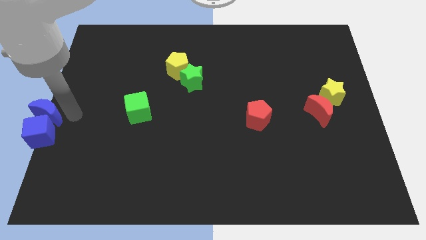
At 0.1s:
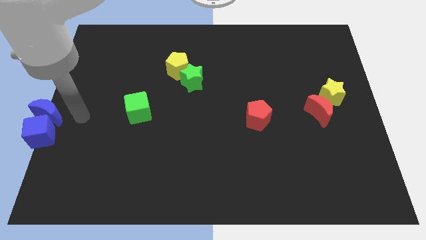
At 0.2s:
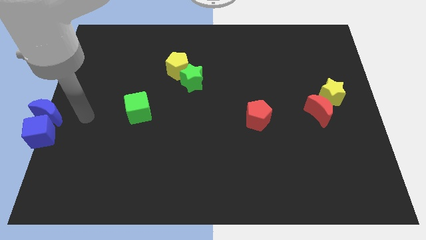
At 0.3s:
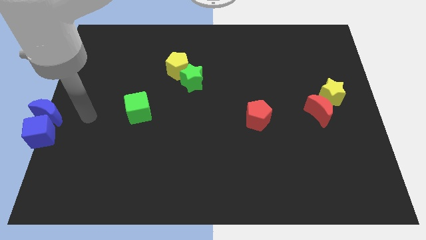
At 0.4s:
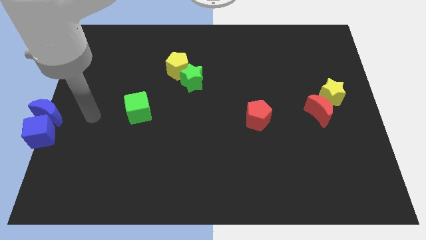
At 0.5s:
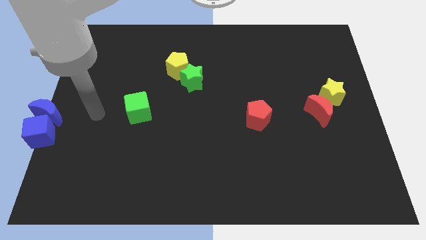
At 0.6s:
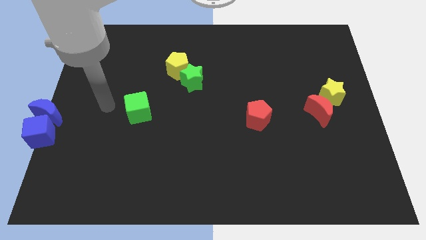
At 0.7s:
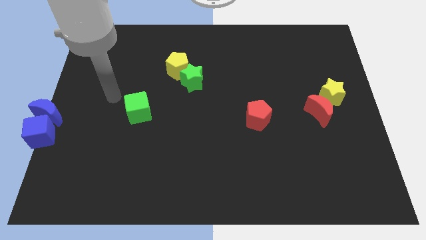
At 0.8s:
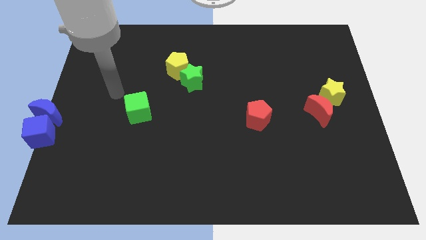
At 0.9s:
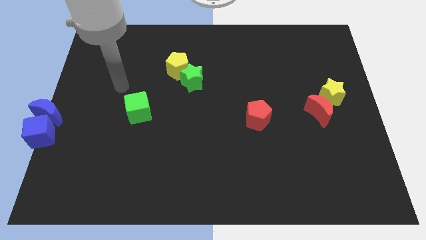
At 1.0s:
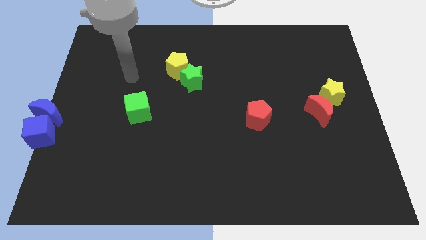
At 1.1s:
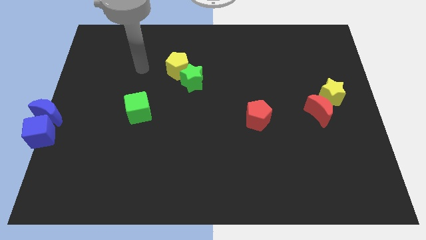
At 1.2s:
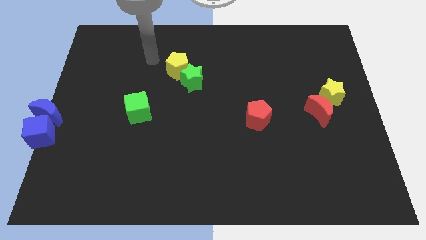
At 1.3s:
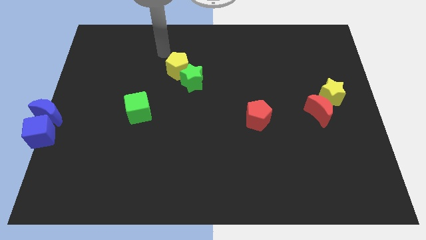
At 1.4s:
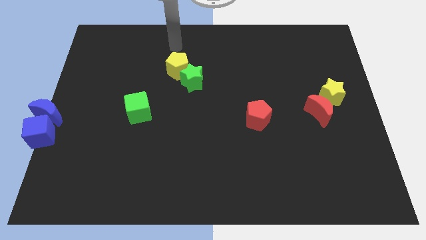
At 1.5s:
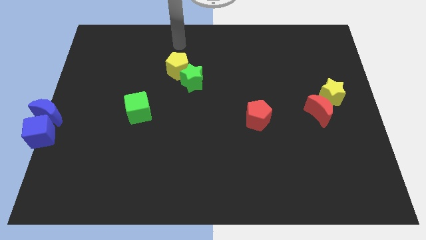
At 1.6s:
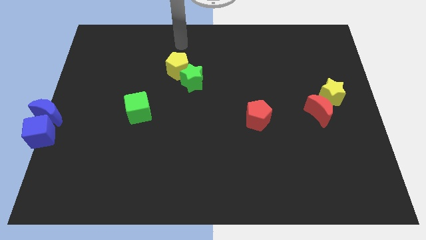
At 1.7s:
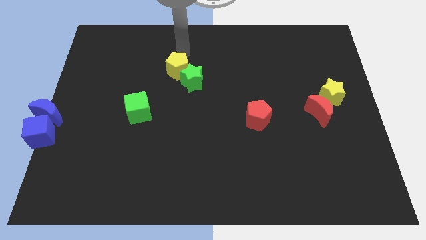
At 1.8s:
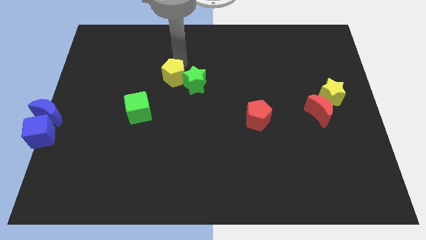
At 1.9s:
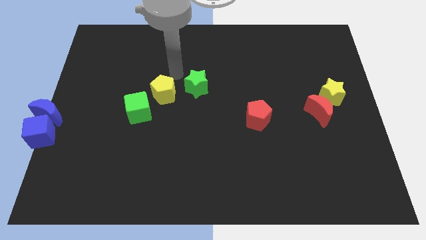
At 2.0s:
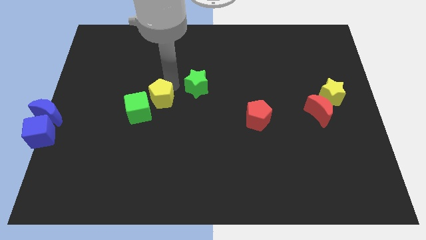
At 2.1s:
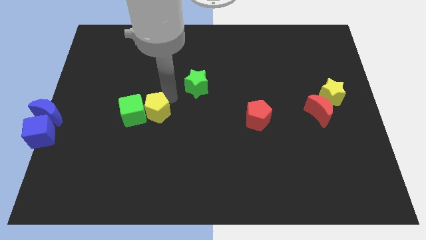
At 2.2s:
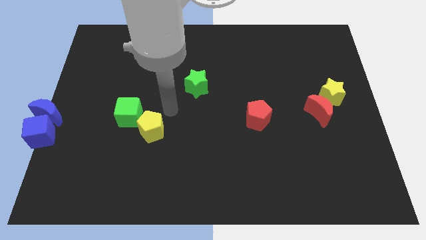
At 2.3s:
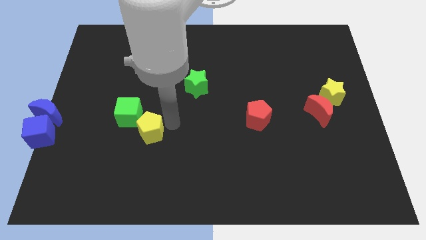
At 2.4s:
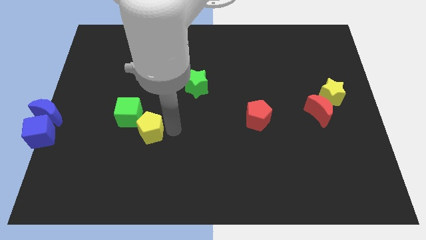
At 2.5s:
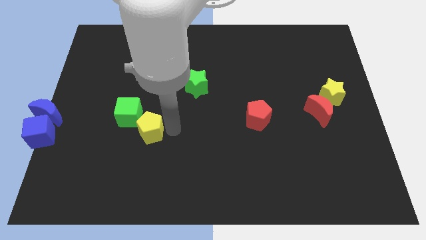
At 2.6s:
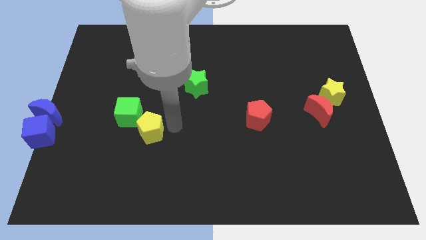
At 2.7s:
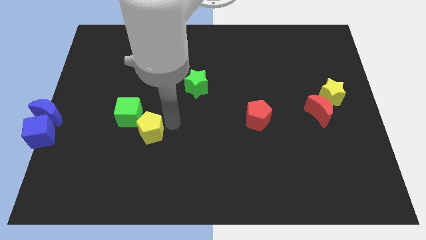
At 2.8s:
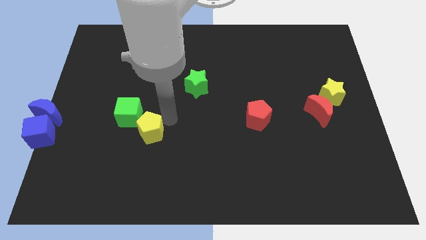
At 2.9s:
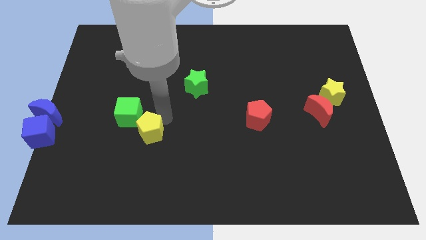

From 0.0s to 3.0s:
move the yellow pentagon diagonally bottom right to the green cube

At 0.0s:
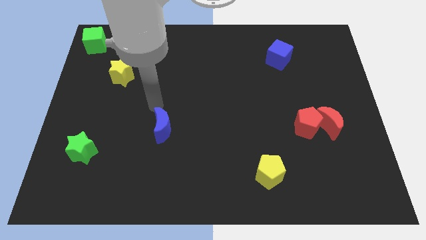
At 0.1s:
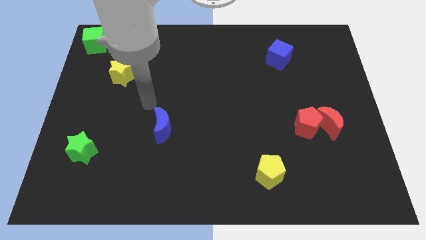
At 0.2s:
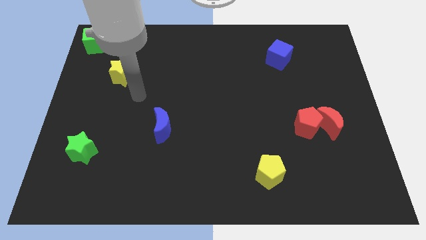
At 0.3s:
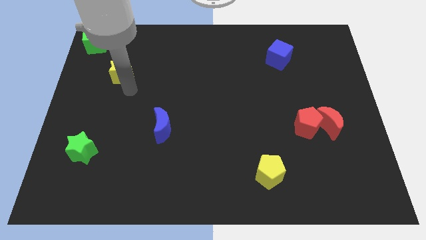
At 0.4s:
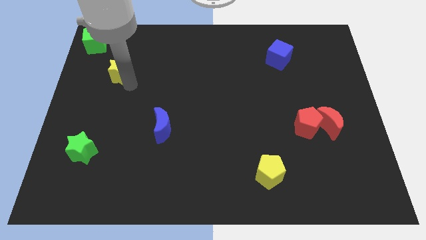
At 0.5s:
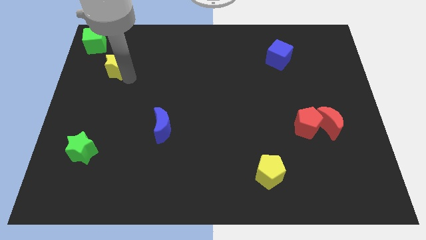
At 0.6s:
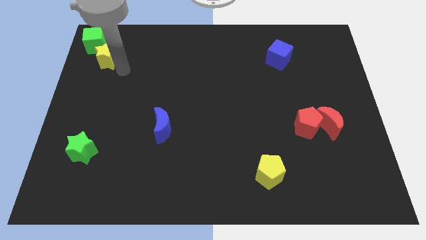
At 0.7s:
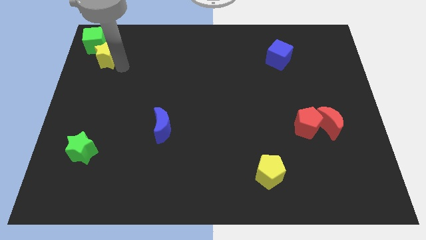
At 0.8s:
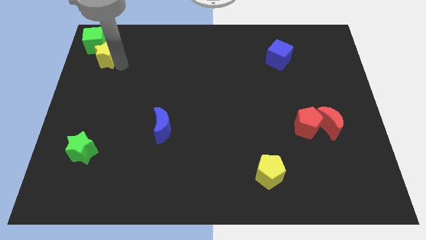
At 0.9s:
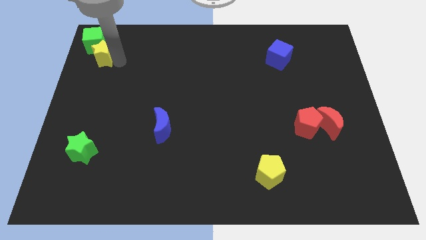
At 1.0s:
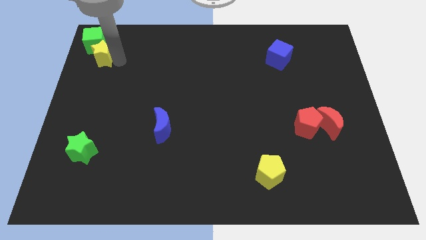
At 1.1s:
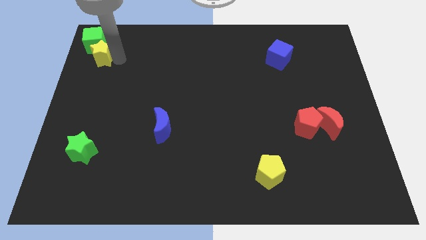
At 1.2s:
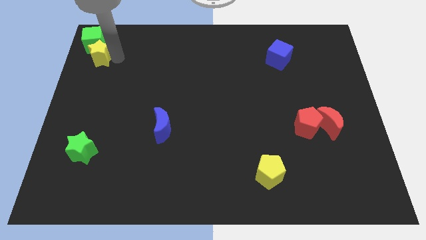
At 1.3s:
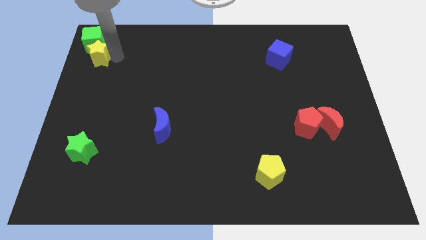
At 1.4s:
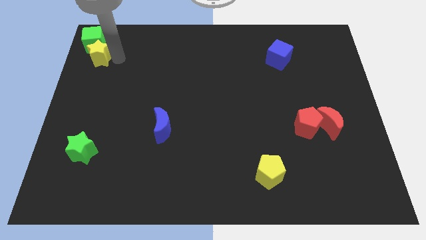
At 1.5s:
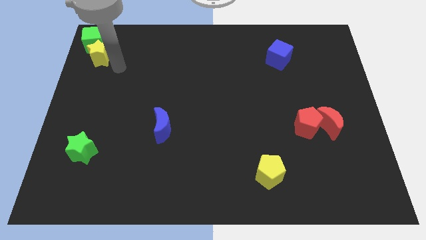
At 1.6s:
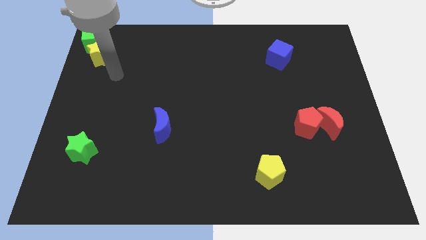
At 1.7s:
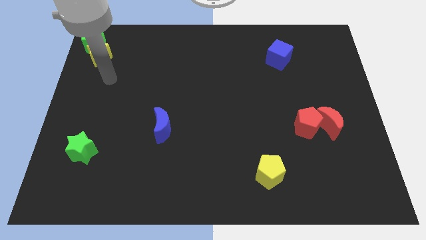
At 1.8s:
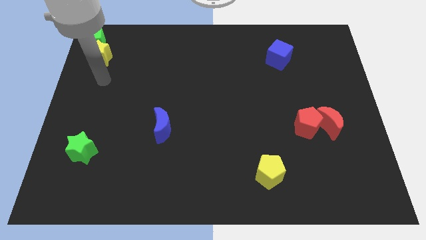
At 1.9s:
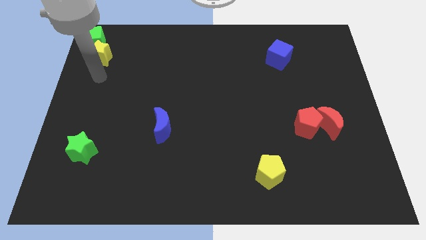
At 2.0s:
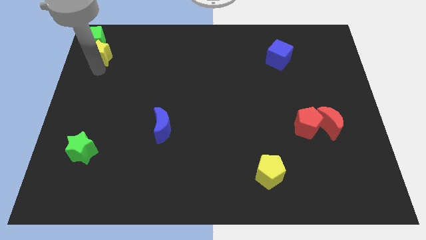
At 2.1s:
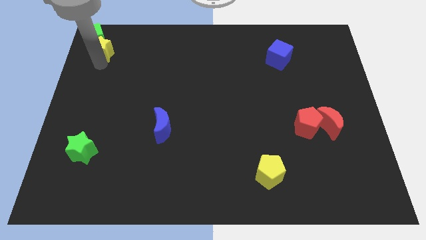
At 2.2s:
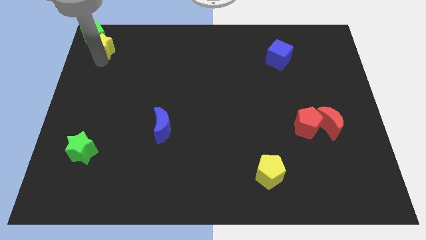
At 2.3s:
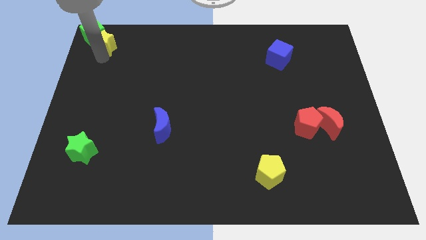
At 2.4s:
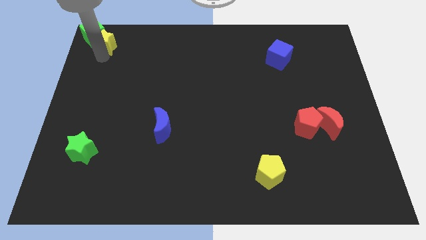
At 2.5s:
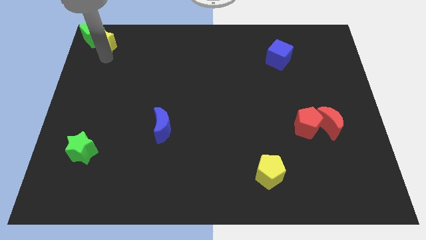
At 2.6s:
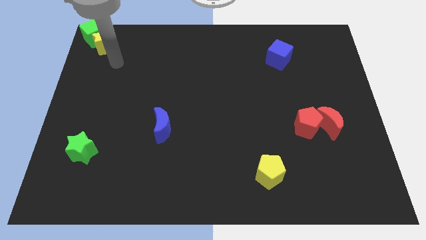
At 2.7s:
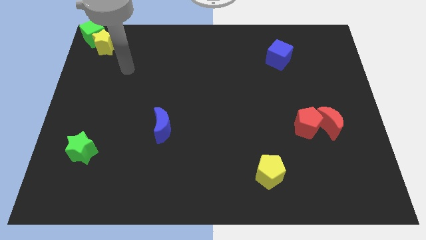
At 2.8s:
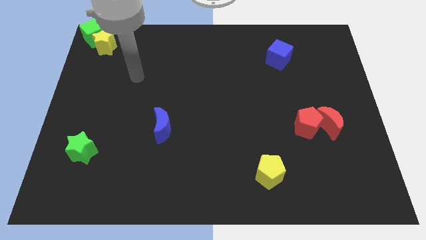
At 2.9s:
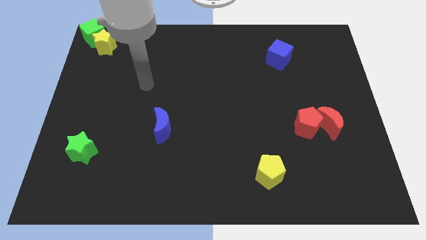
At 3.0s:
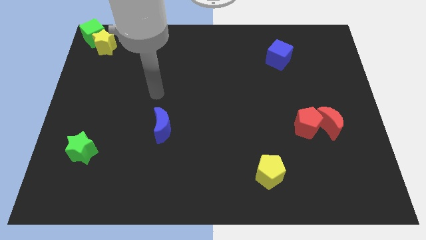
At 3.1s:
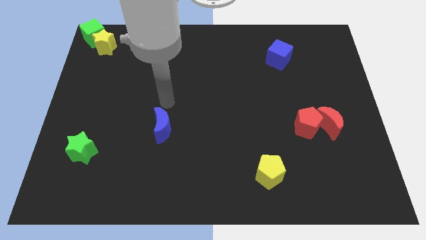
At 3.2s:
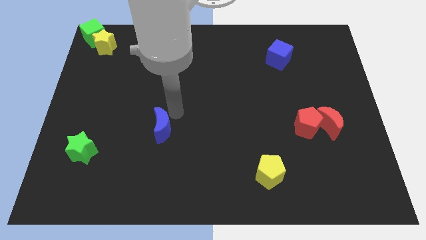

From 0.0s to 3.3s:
move the yellow star into the green cube

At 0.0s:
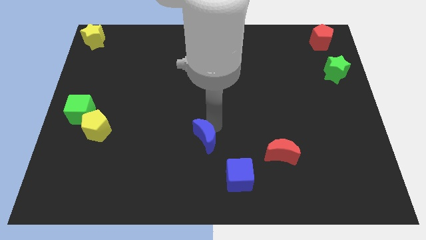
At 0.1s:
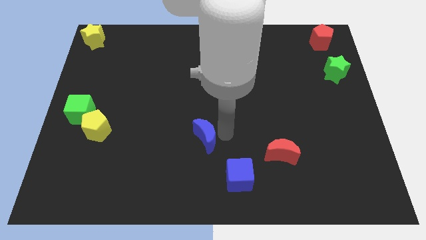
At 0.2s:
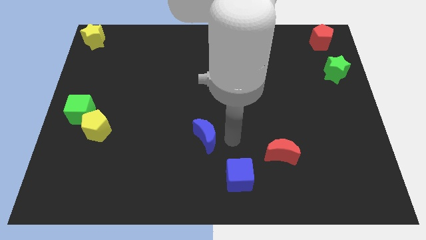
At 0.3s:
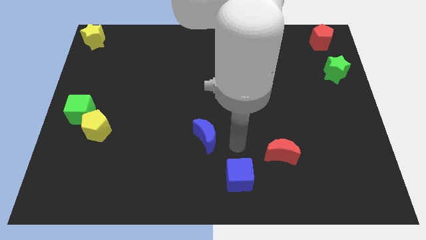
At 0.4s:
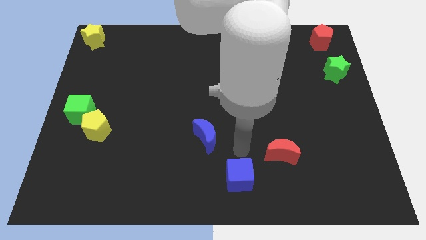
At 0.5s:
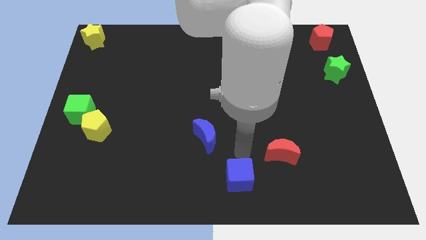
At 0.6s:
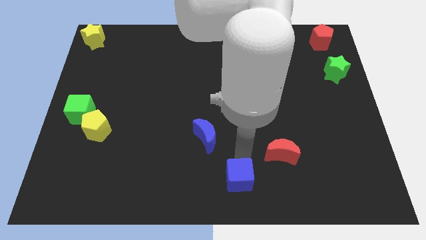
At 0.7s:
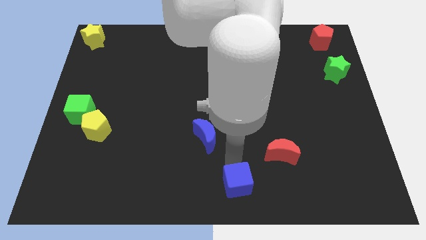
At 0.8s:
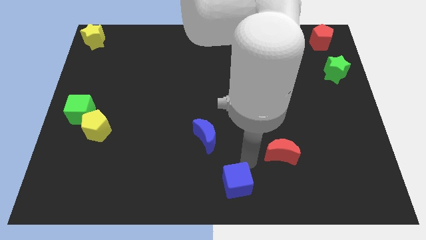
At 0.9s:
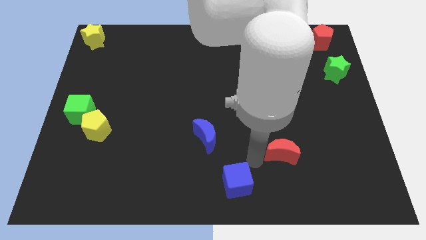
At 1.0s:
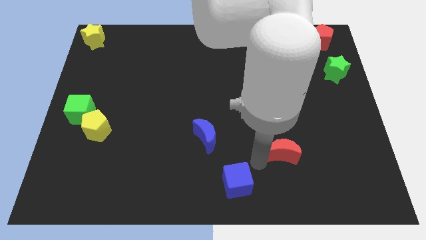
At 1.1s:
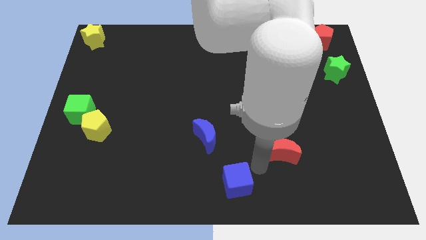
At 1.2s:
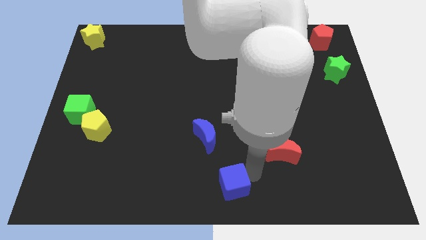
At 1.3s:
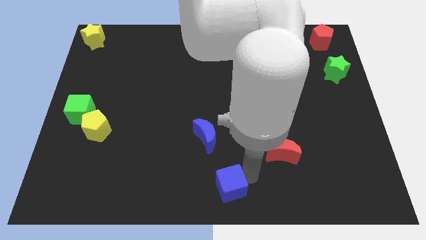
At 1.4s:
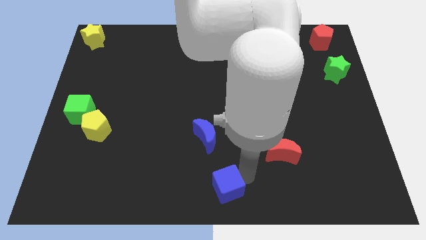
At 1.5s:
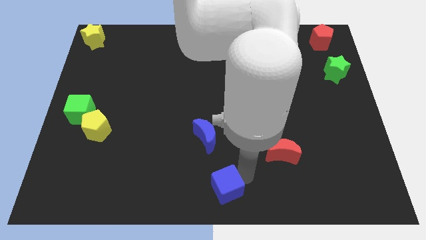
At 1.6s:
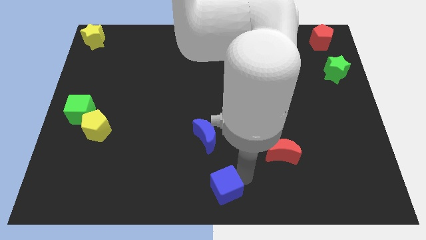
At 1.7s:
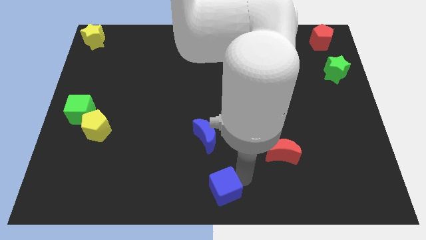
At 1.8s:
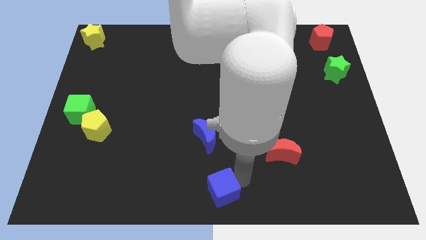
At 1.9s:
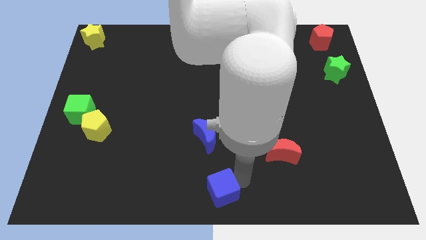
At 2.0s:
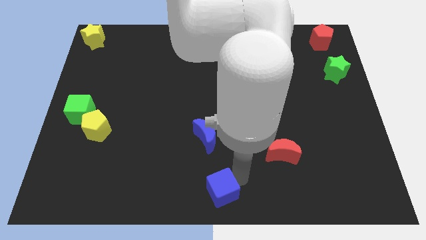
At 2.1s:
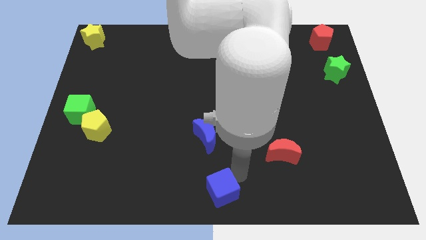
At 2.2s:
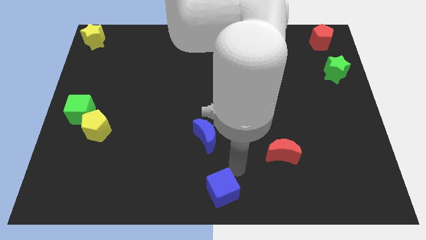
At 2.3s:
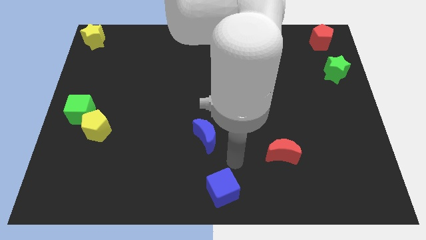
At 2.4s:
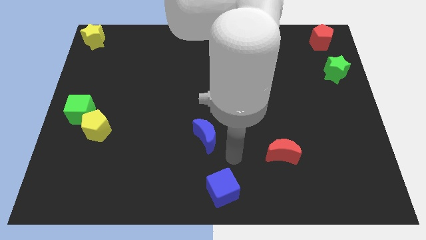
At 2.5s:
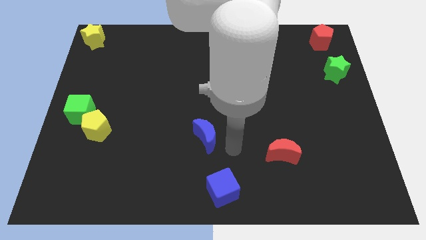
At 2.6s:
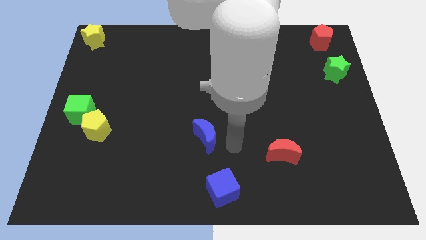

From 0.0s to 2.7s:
push the blue cube to the bottom center of the board

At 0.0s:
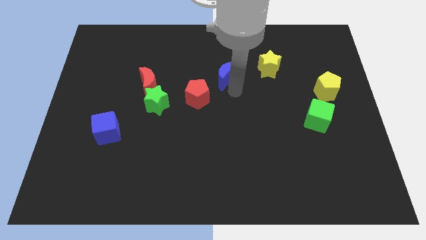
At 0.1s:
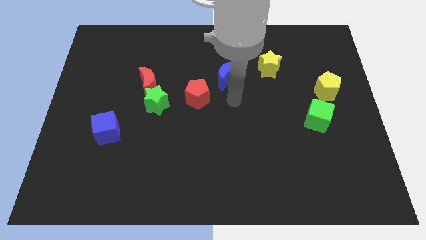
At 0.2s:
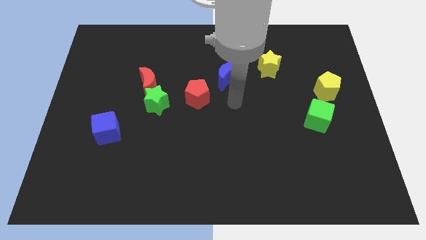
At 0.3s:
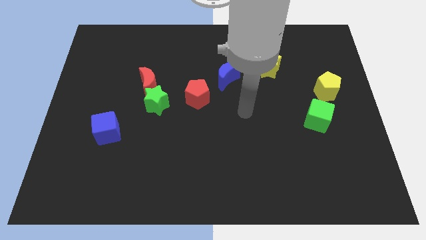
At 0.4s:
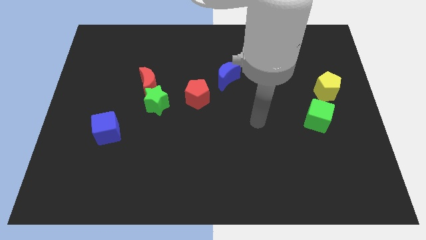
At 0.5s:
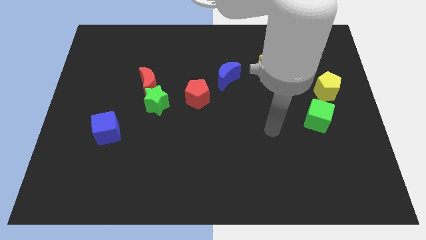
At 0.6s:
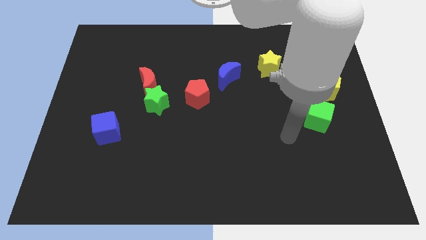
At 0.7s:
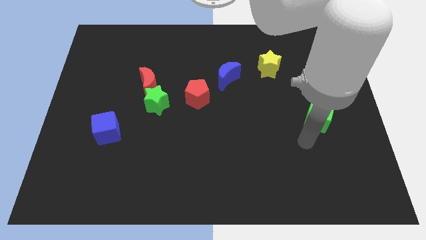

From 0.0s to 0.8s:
move your arm away from blue moon
